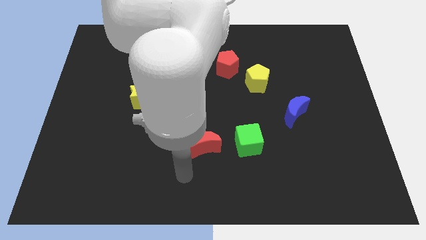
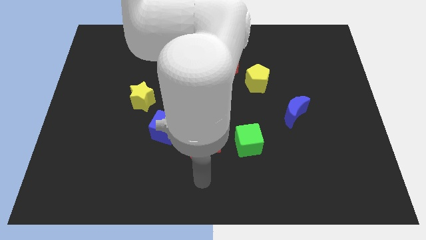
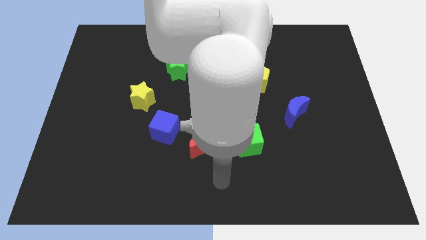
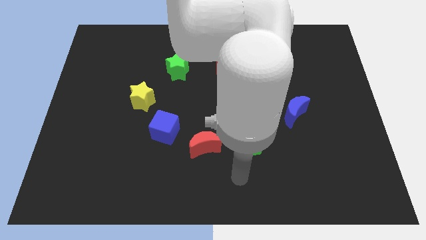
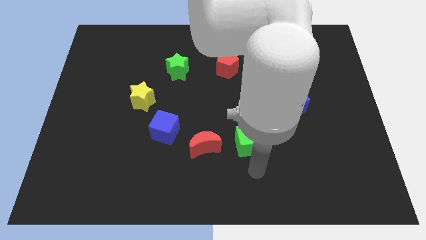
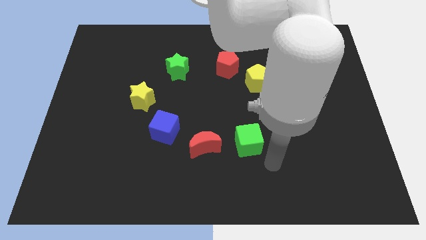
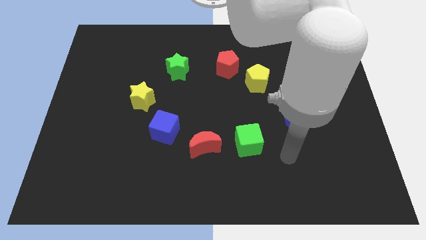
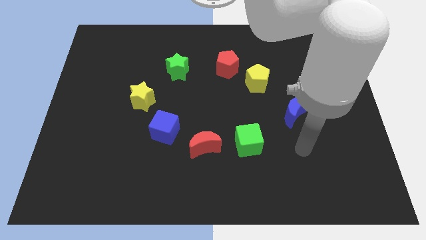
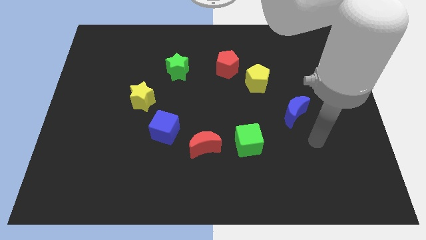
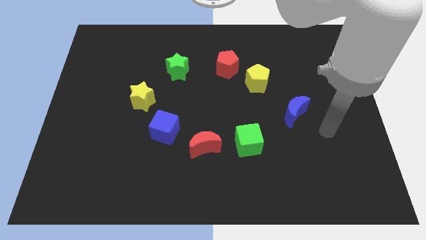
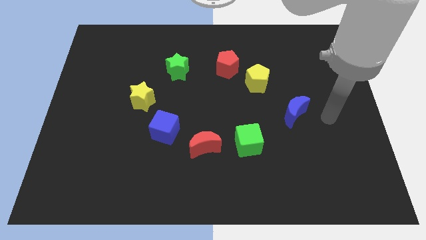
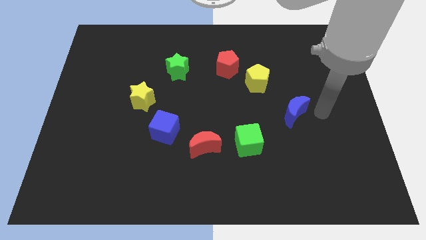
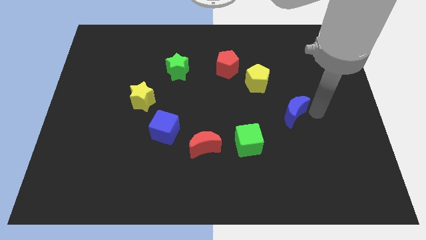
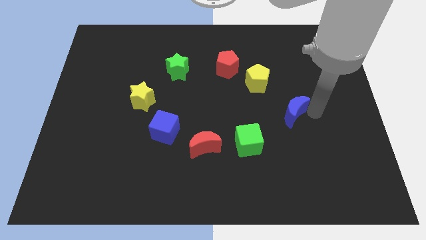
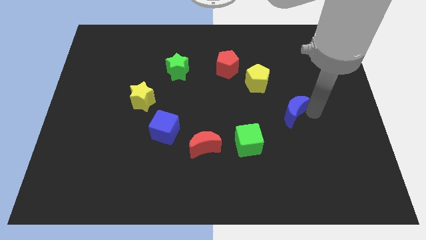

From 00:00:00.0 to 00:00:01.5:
move your arm away from the blue cube

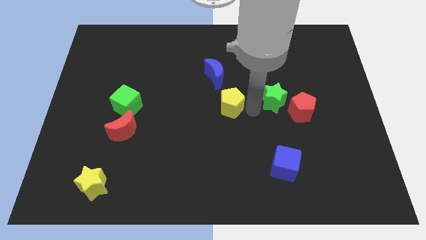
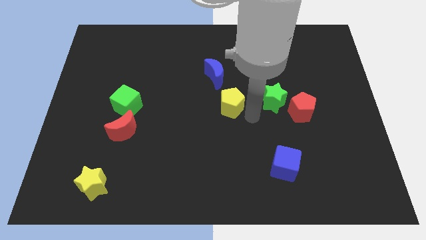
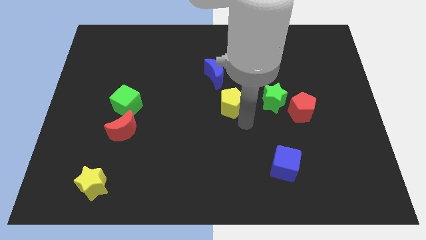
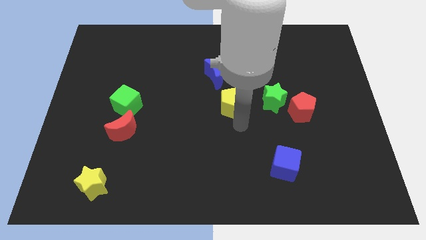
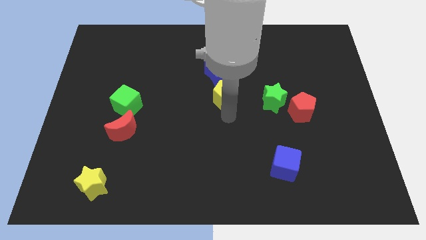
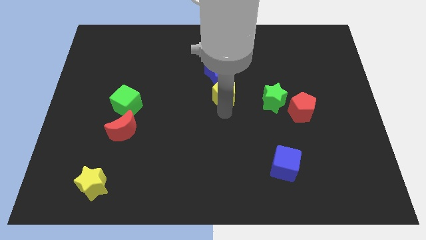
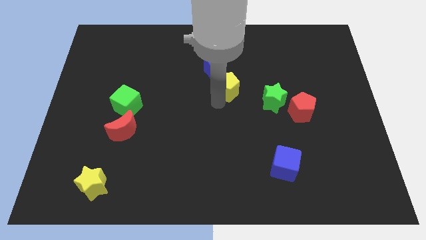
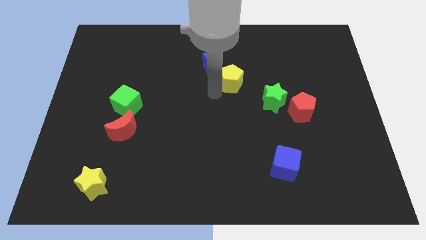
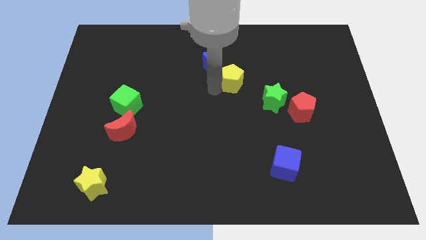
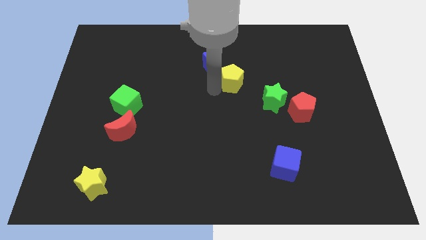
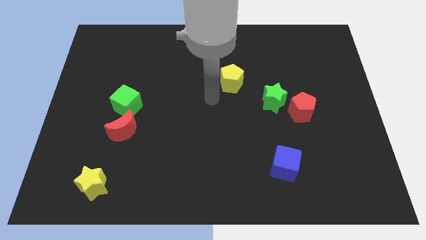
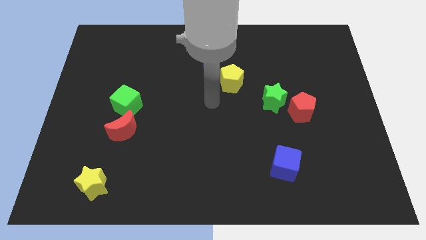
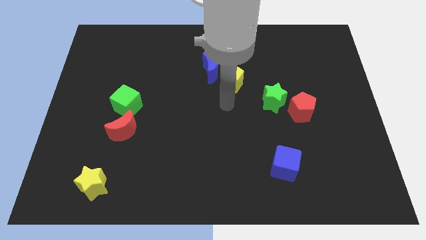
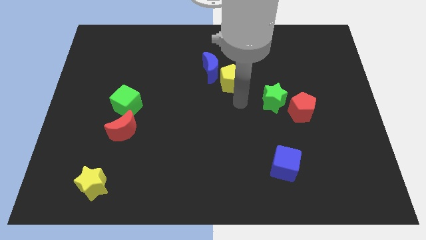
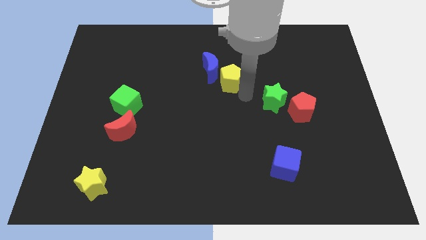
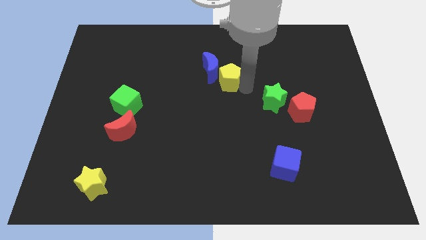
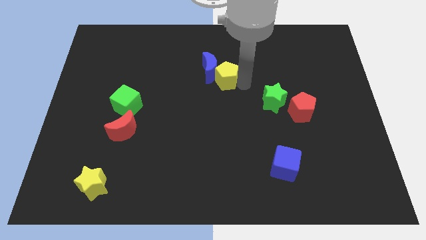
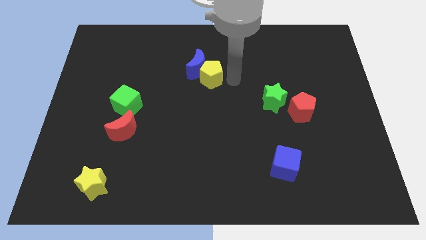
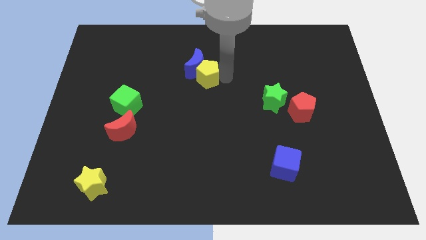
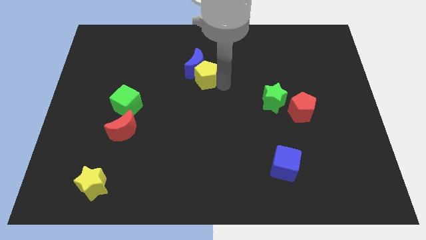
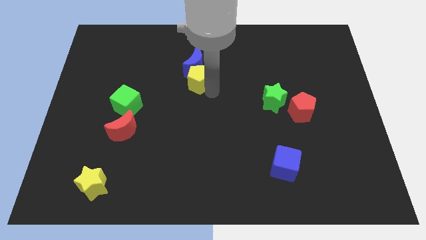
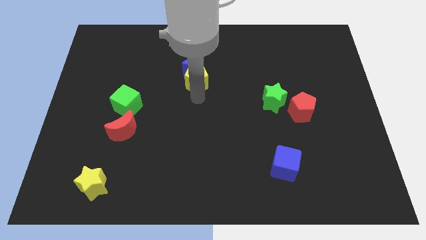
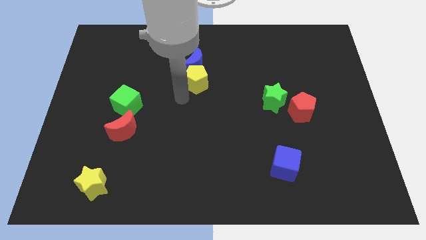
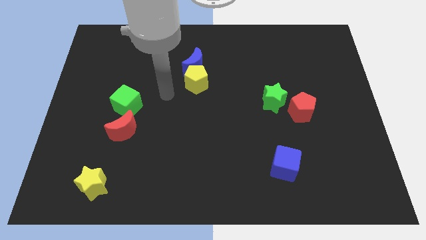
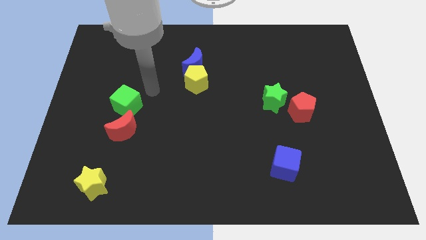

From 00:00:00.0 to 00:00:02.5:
place the yellow pentagon diagonally top right to the green cube

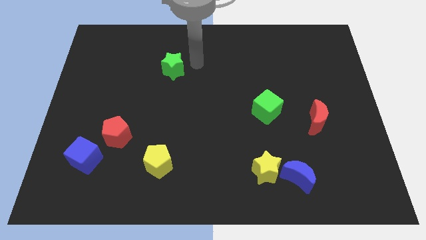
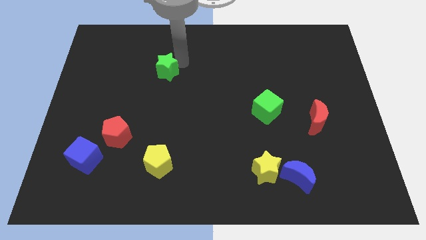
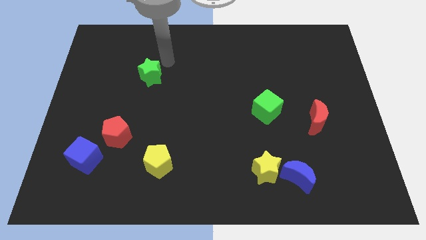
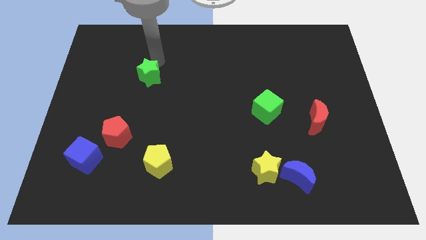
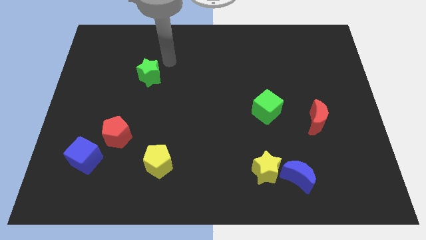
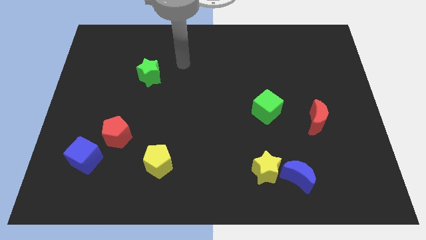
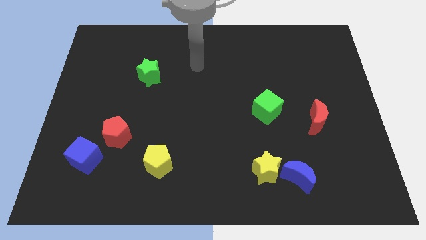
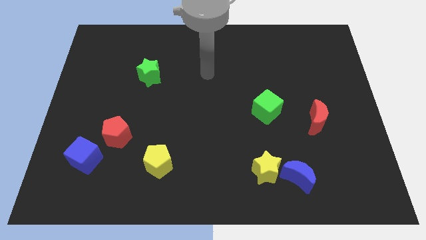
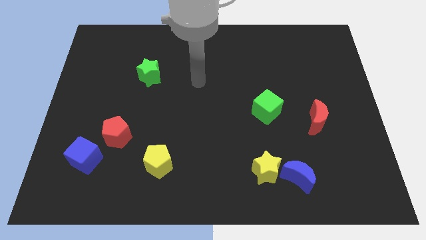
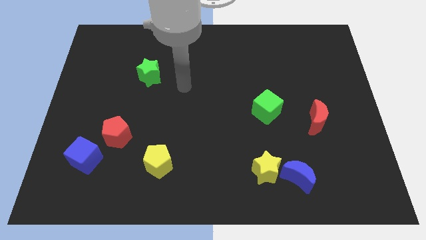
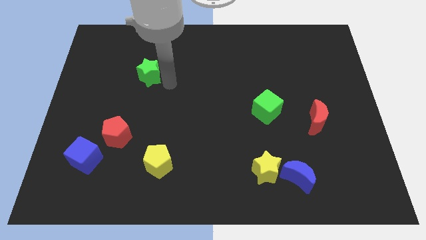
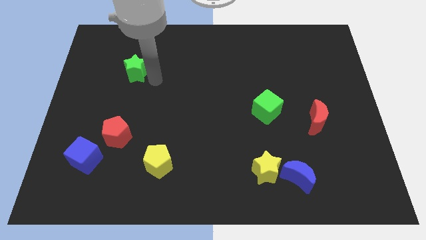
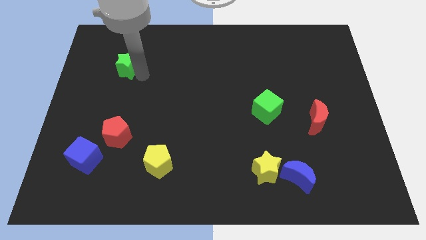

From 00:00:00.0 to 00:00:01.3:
push green star to the left

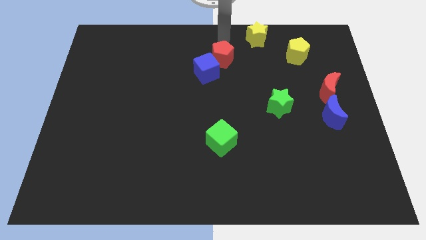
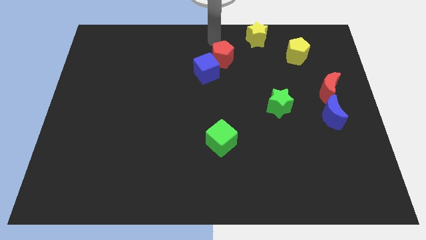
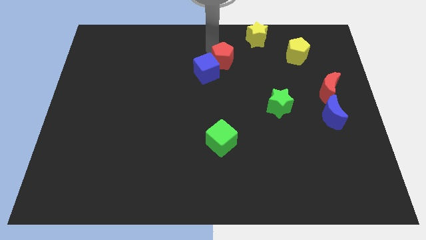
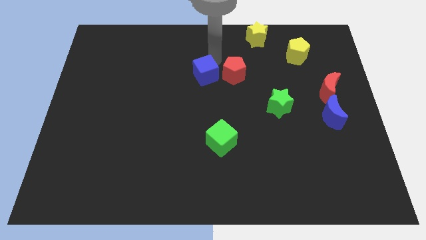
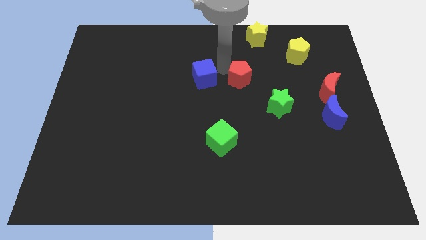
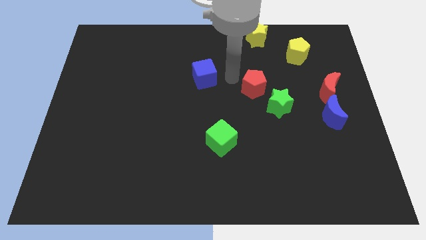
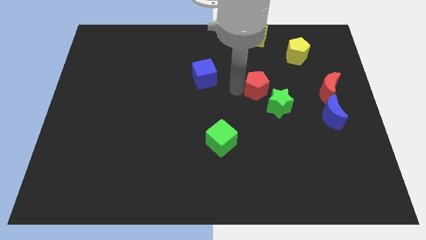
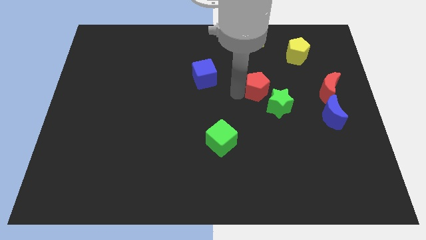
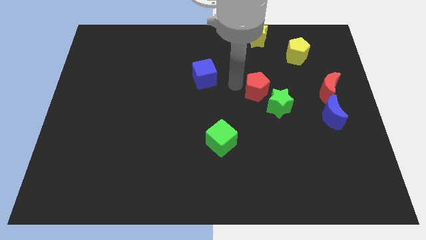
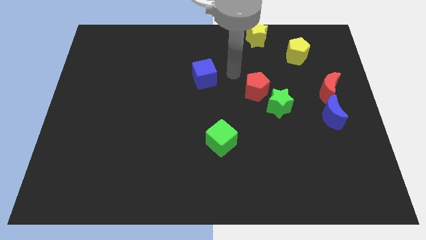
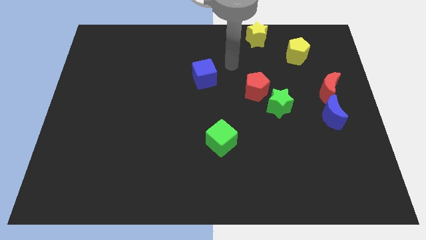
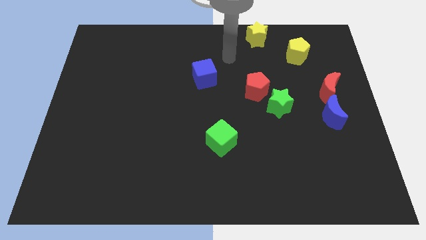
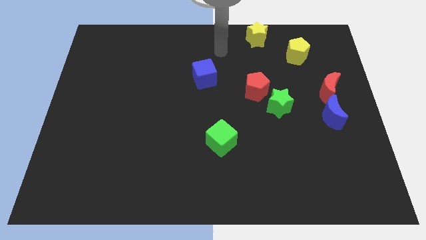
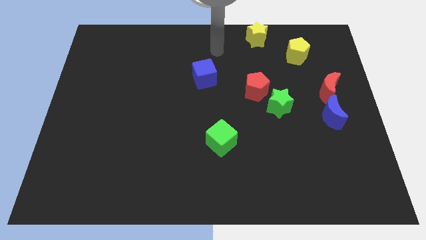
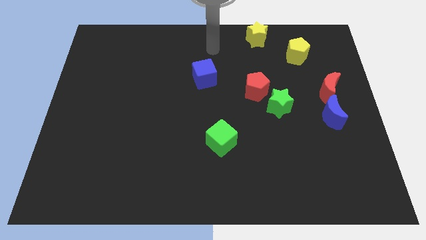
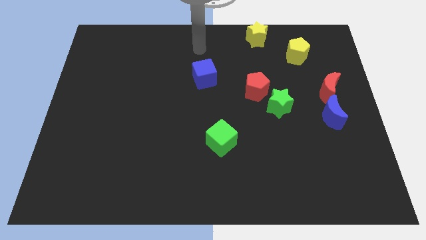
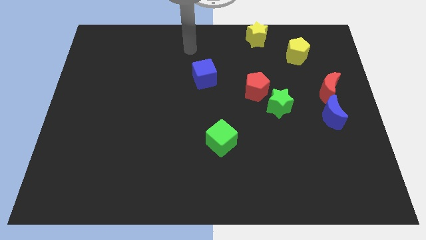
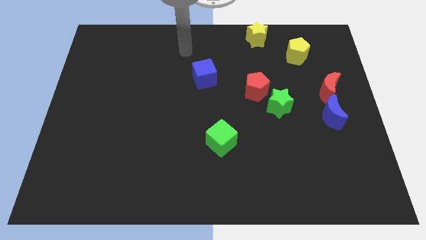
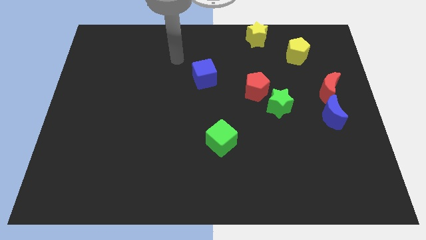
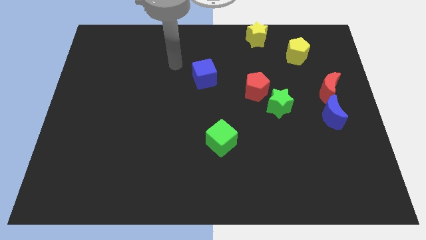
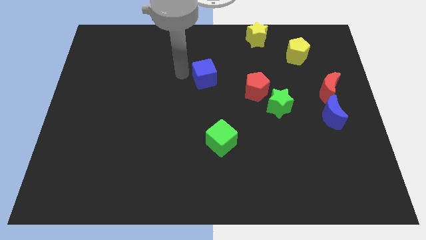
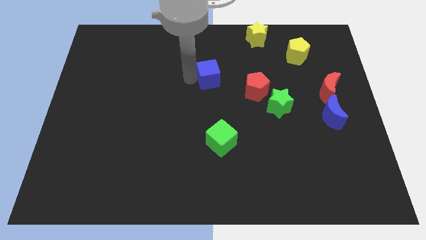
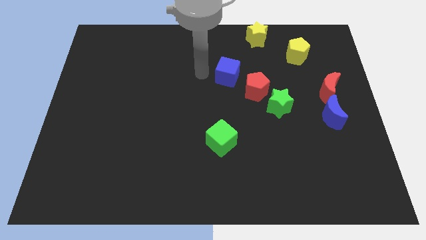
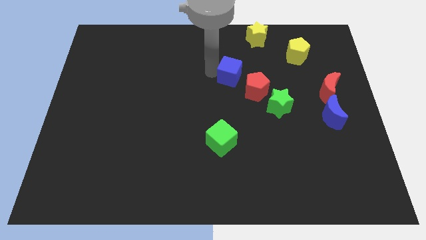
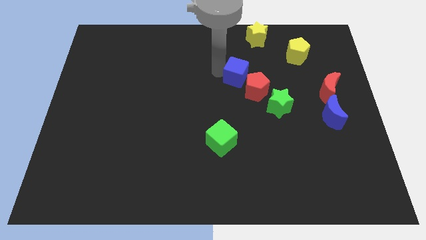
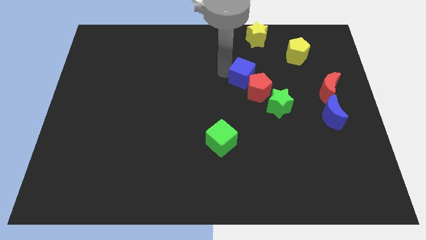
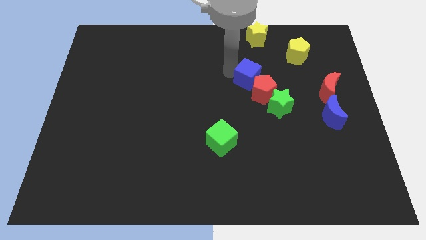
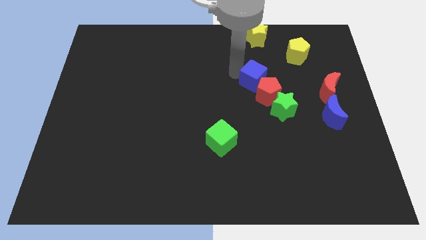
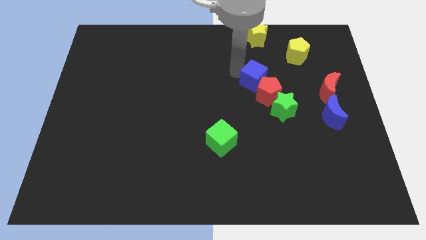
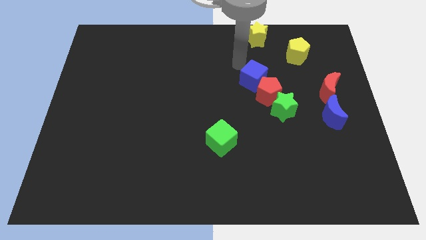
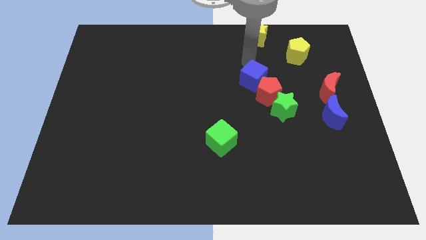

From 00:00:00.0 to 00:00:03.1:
drag the red pentagon and blue cube to the center

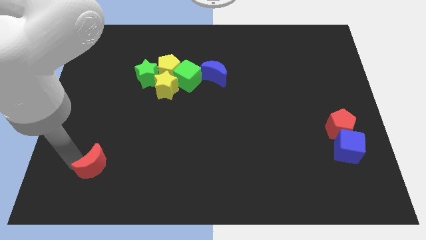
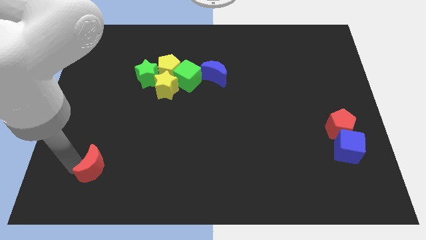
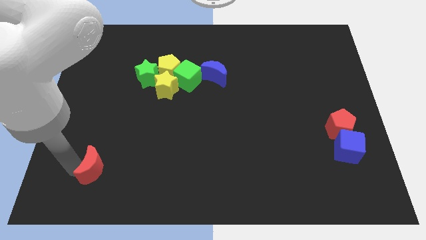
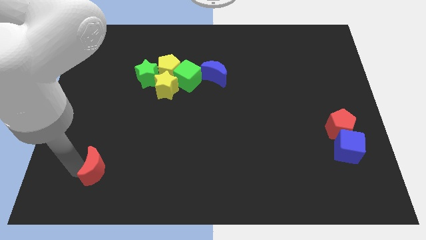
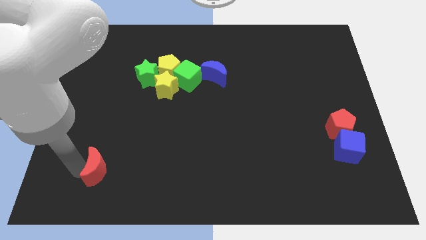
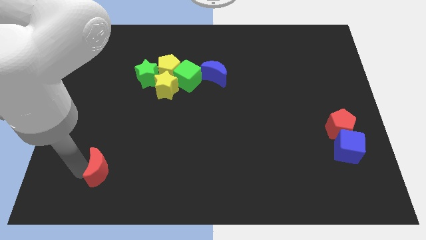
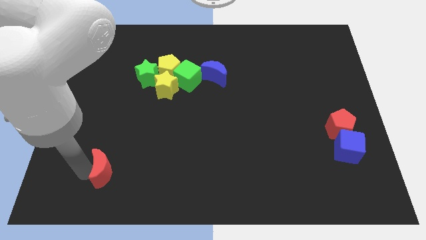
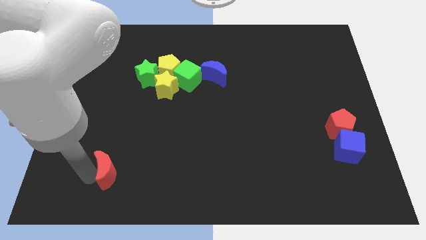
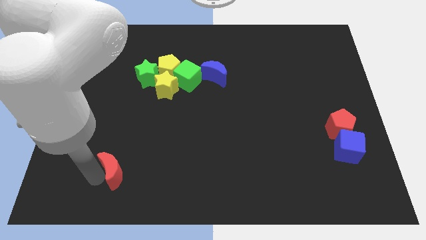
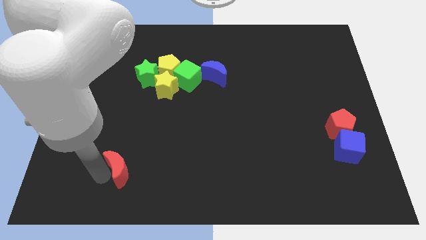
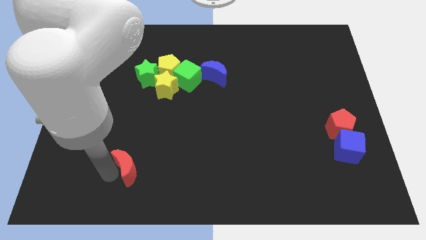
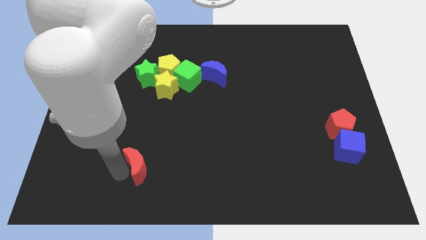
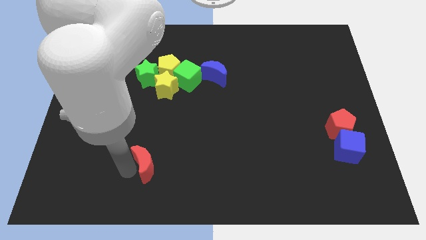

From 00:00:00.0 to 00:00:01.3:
push the red crescent to the right
